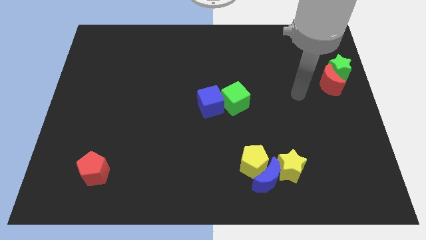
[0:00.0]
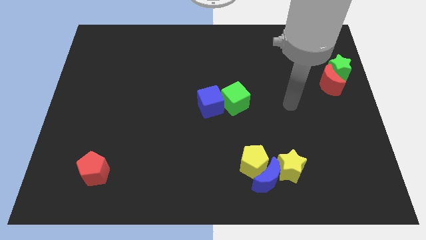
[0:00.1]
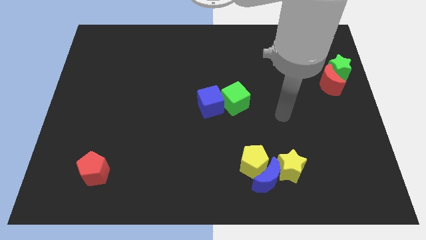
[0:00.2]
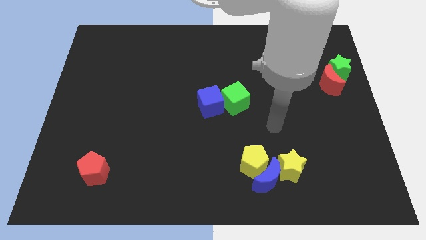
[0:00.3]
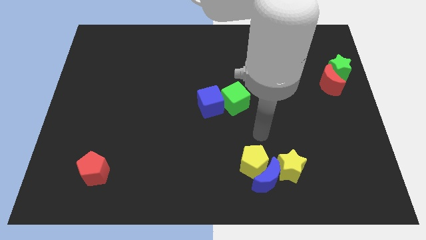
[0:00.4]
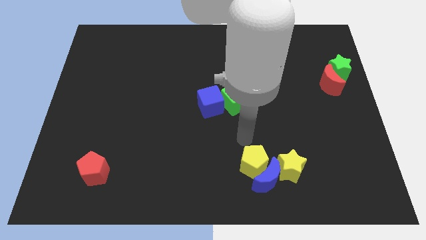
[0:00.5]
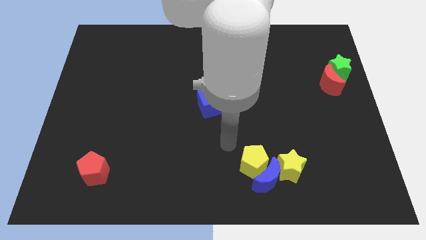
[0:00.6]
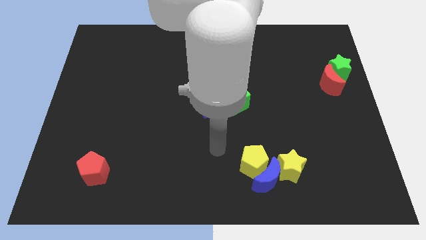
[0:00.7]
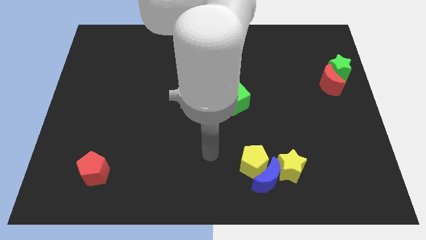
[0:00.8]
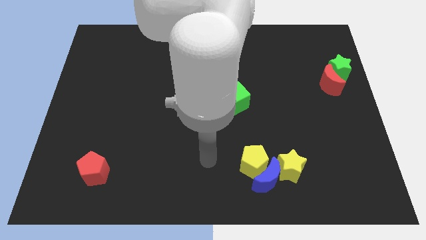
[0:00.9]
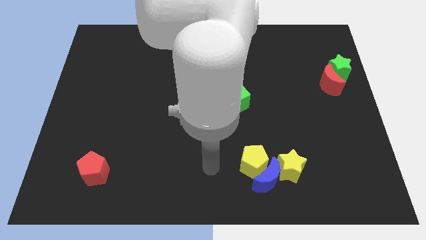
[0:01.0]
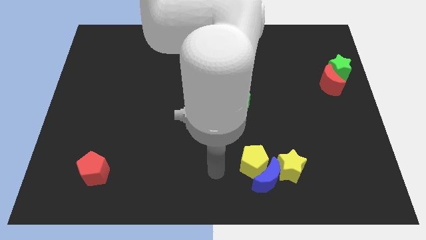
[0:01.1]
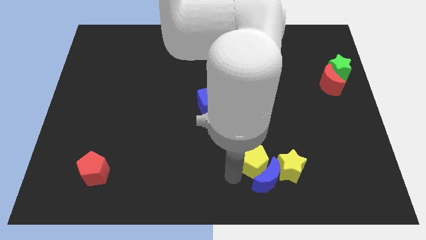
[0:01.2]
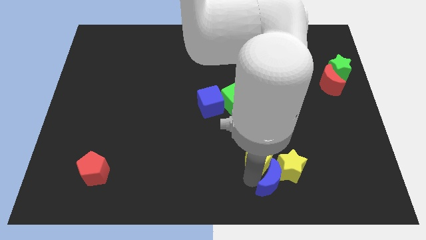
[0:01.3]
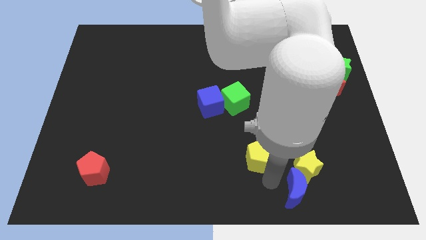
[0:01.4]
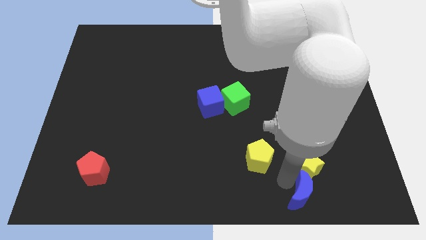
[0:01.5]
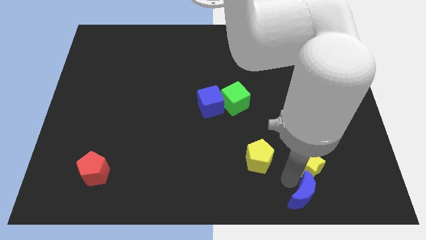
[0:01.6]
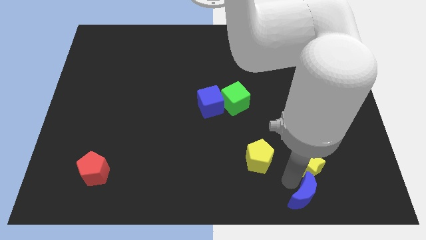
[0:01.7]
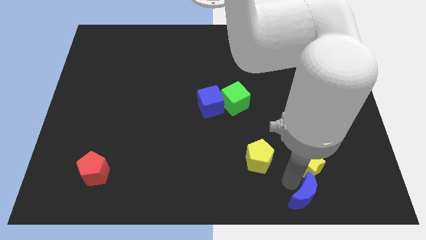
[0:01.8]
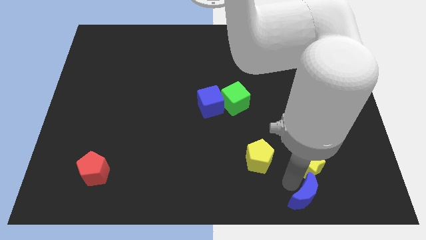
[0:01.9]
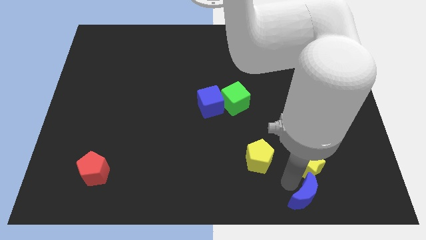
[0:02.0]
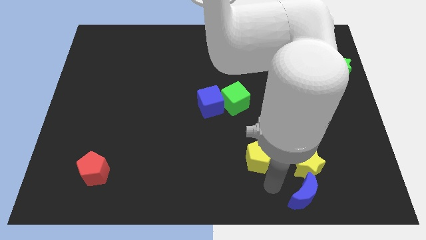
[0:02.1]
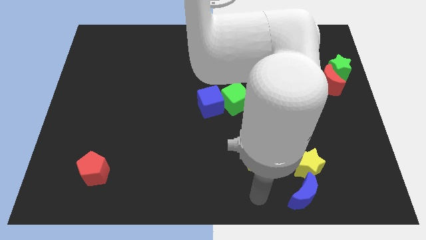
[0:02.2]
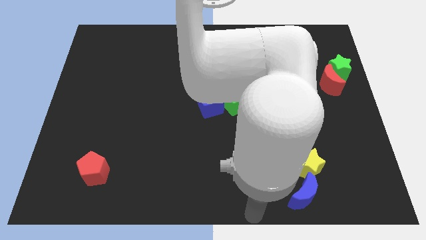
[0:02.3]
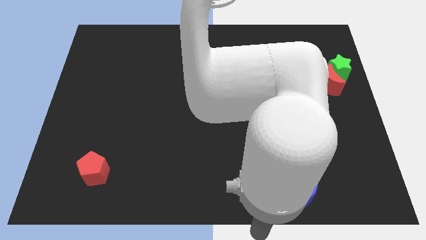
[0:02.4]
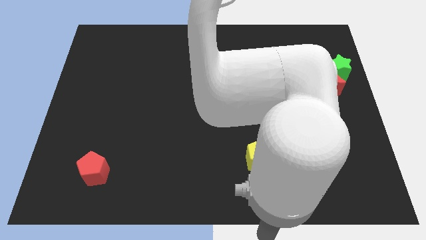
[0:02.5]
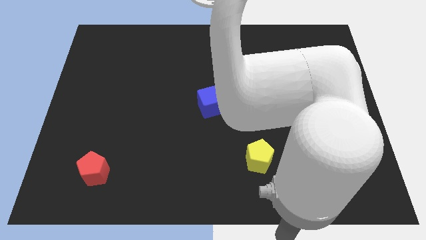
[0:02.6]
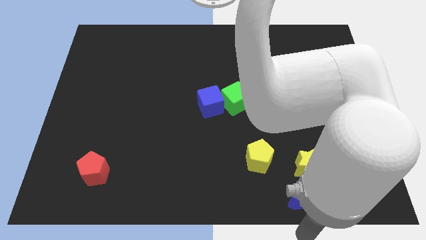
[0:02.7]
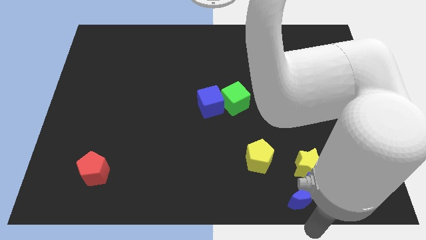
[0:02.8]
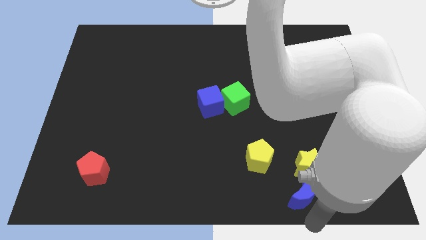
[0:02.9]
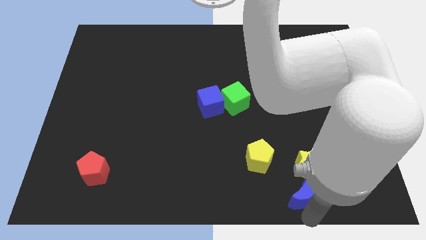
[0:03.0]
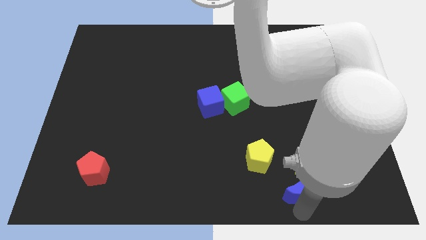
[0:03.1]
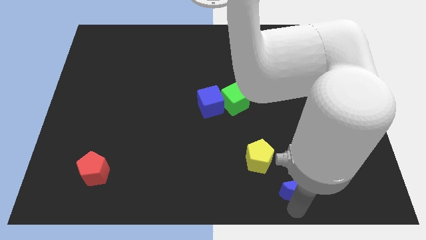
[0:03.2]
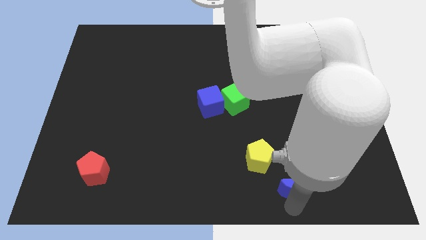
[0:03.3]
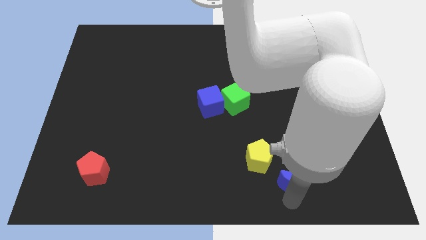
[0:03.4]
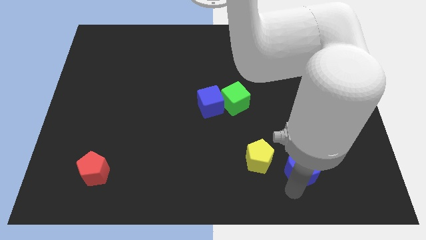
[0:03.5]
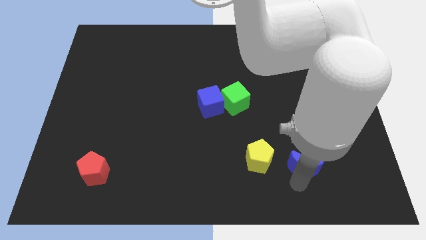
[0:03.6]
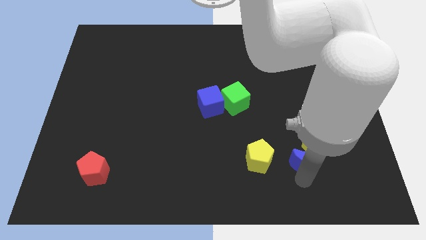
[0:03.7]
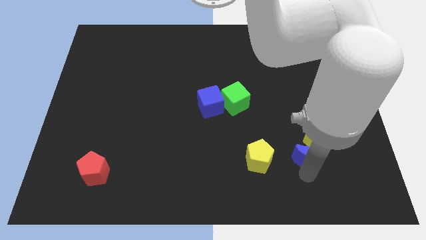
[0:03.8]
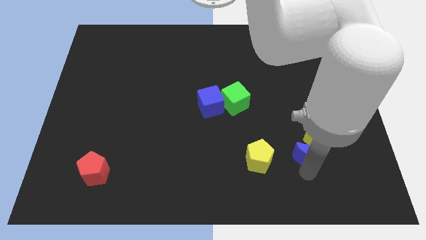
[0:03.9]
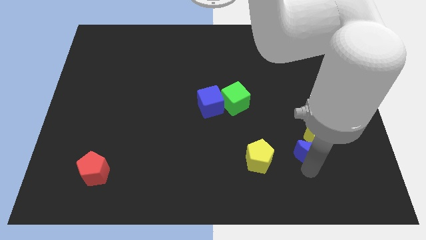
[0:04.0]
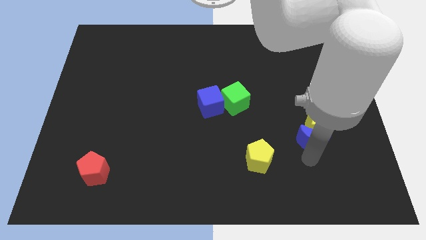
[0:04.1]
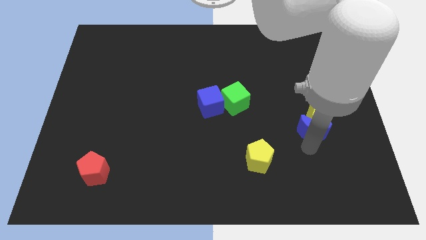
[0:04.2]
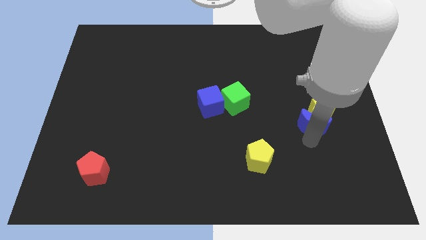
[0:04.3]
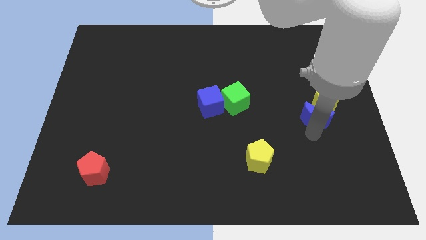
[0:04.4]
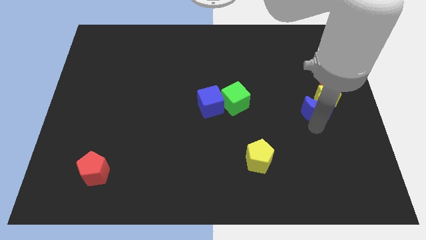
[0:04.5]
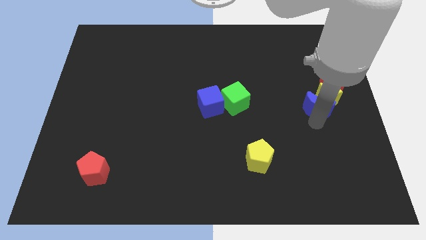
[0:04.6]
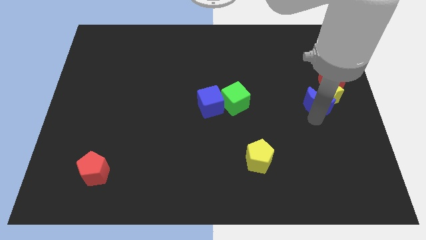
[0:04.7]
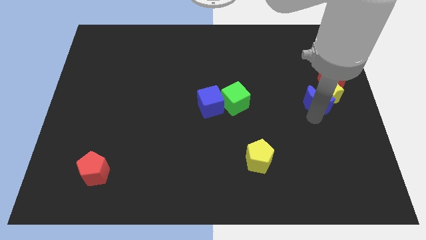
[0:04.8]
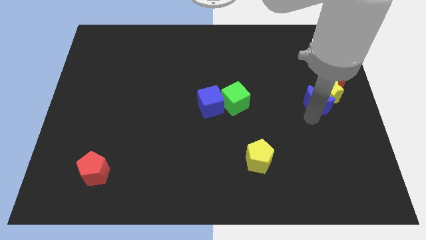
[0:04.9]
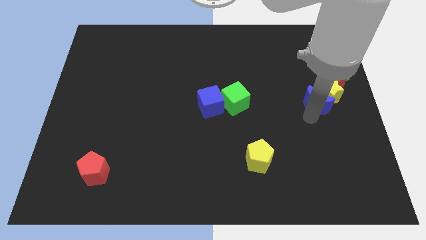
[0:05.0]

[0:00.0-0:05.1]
push the yellow star and blue crescent into the red crescent

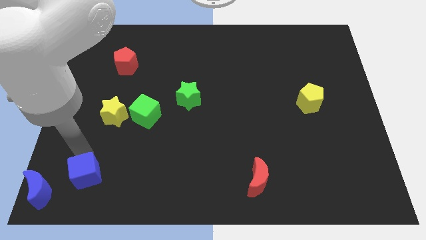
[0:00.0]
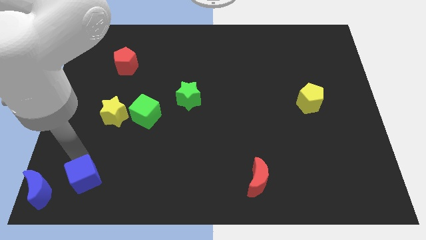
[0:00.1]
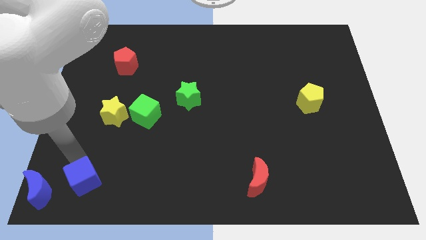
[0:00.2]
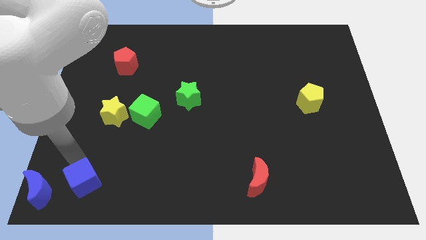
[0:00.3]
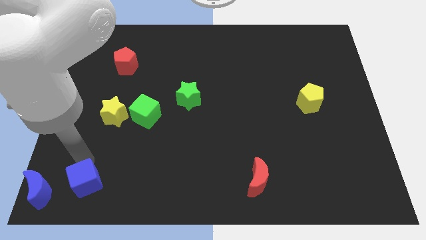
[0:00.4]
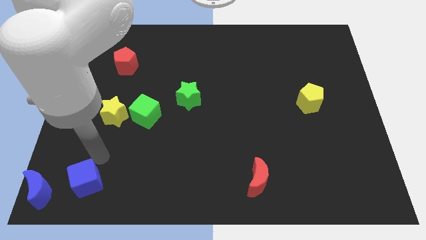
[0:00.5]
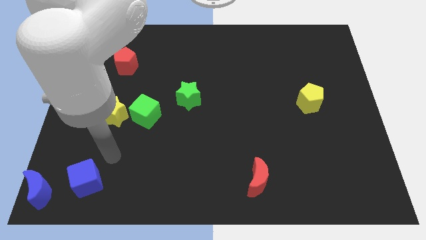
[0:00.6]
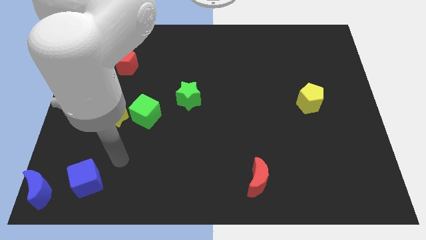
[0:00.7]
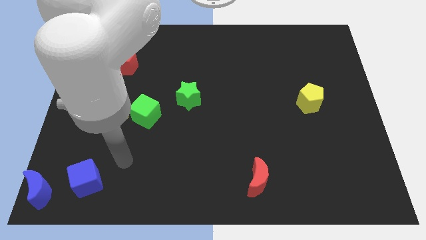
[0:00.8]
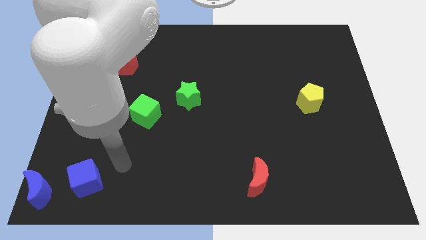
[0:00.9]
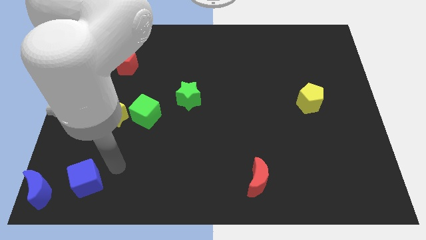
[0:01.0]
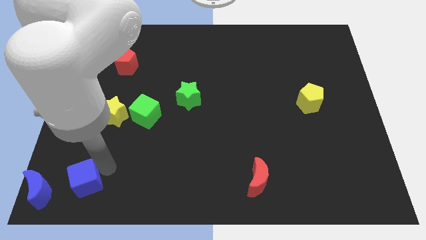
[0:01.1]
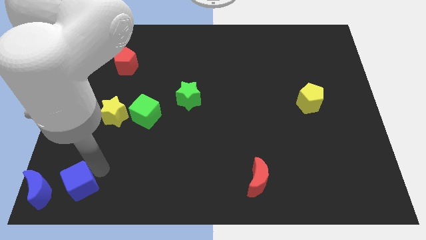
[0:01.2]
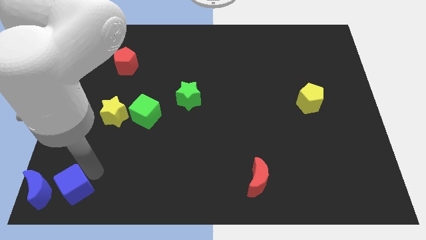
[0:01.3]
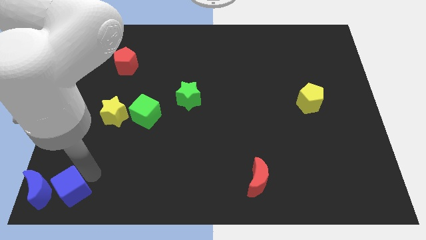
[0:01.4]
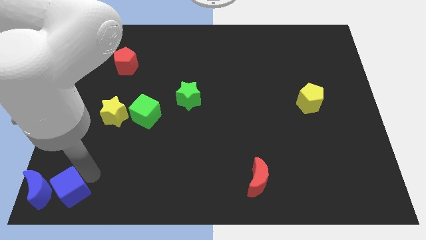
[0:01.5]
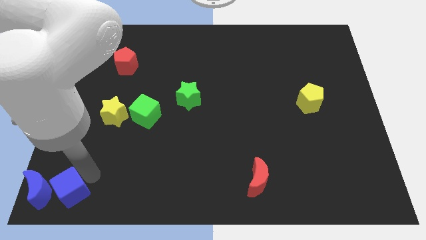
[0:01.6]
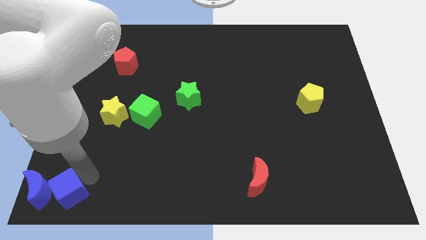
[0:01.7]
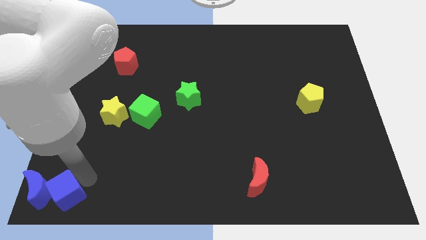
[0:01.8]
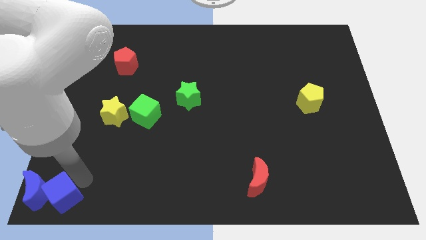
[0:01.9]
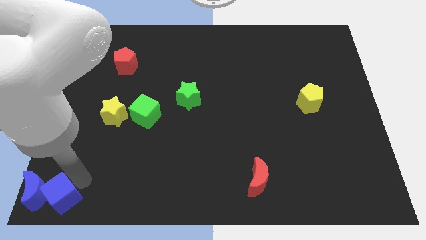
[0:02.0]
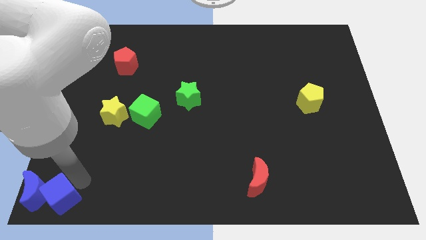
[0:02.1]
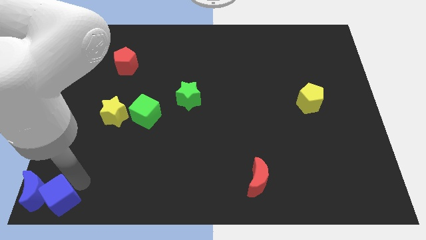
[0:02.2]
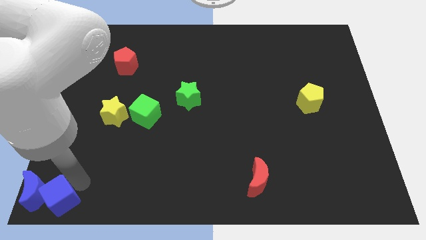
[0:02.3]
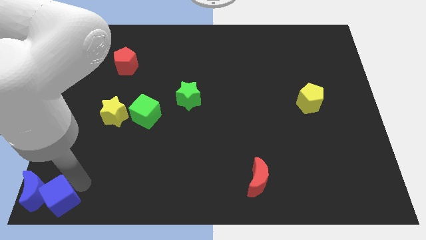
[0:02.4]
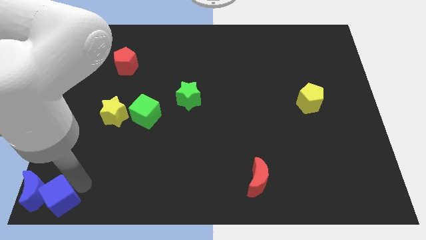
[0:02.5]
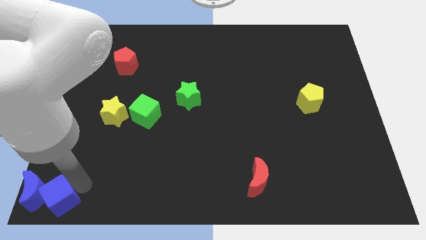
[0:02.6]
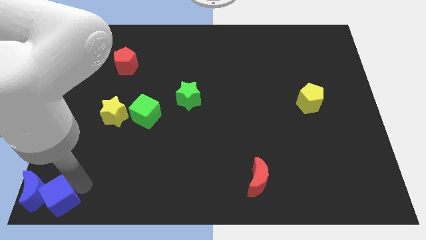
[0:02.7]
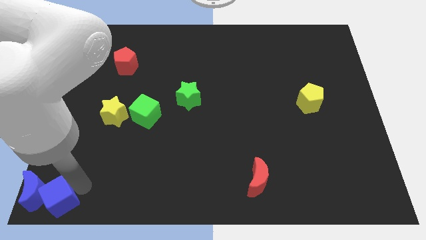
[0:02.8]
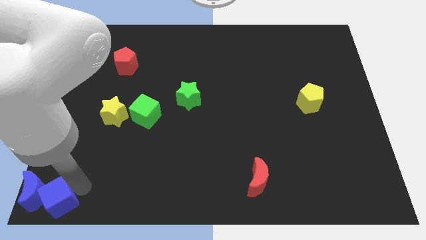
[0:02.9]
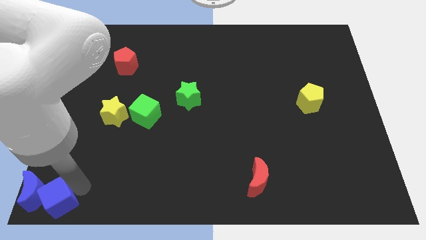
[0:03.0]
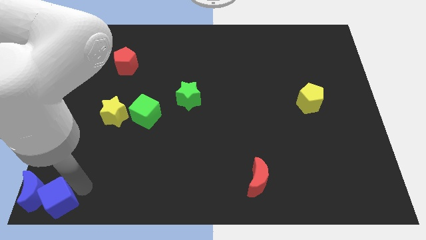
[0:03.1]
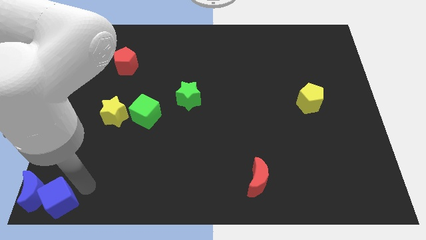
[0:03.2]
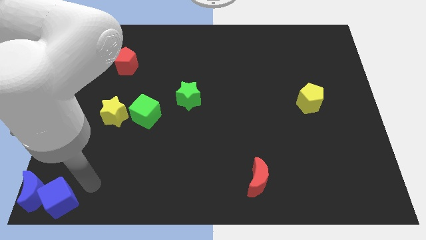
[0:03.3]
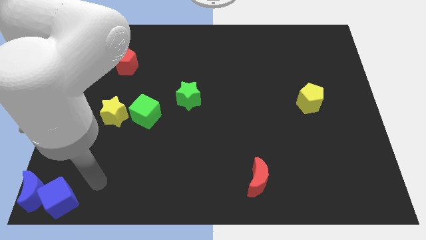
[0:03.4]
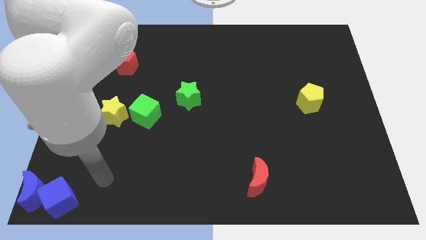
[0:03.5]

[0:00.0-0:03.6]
move the blue cube on the right side of the blue moon

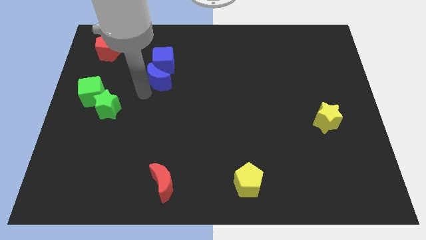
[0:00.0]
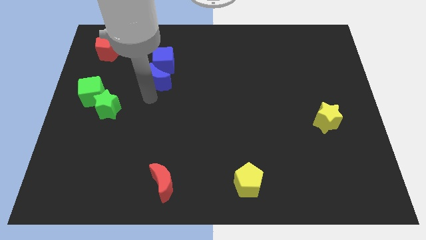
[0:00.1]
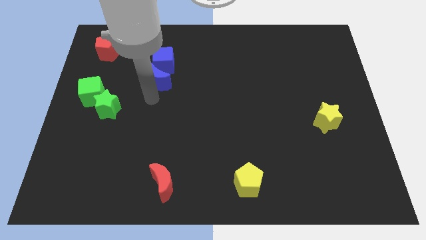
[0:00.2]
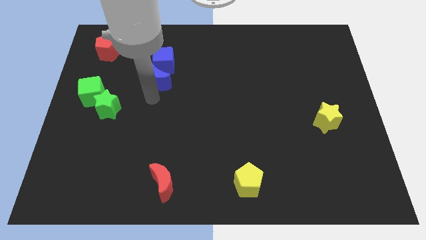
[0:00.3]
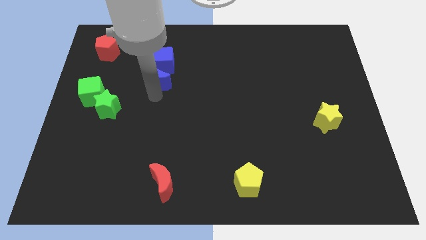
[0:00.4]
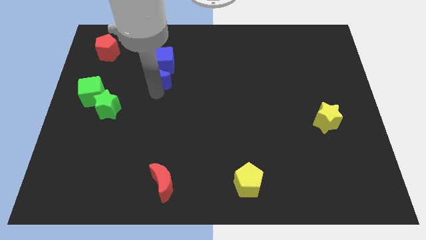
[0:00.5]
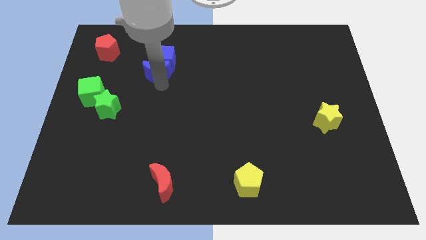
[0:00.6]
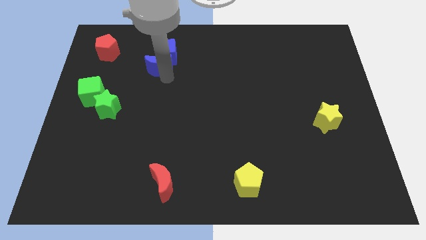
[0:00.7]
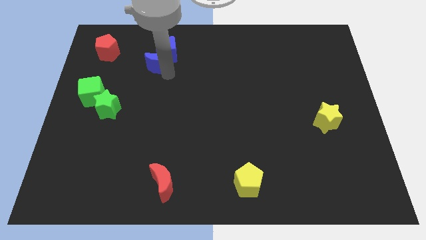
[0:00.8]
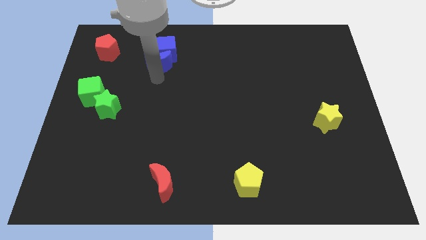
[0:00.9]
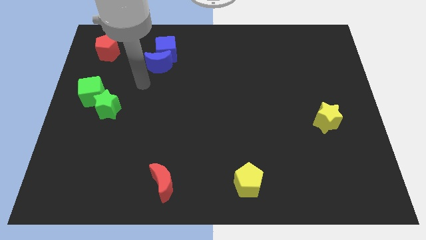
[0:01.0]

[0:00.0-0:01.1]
move the blue crescent along with blue cube toward the top of the board
